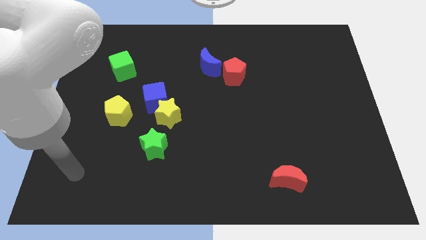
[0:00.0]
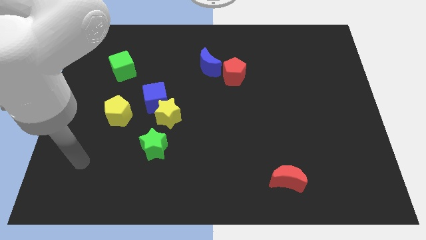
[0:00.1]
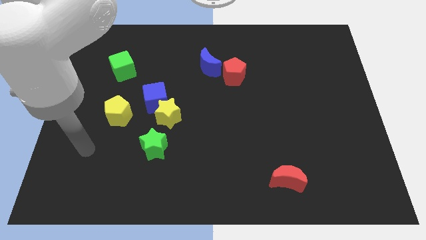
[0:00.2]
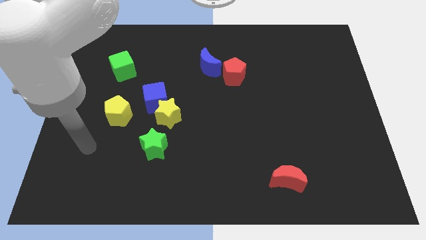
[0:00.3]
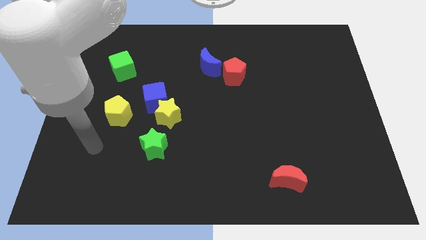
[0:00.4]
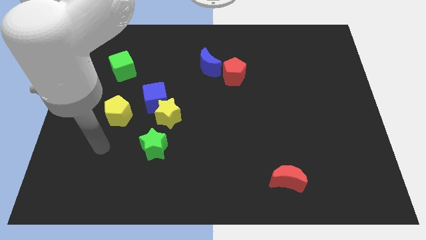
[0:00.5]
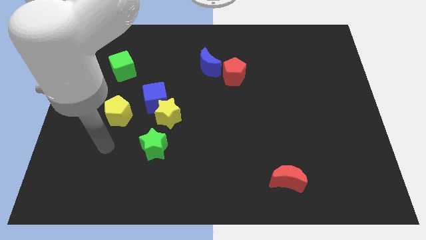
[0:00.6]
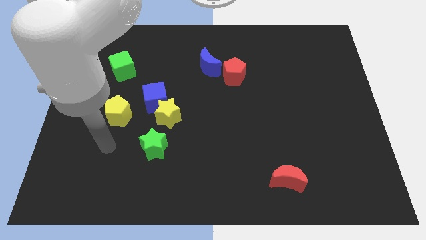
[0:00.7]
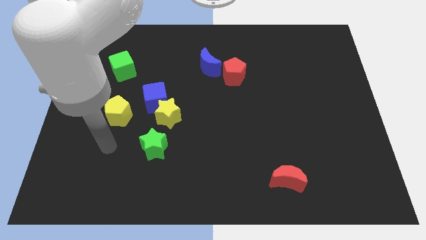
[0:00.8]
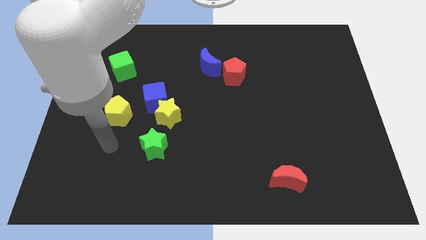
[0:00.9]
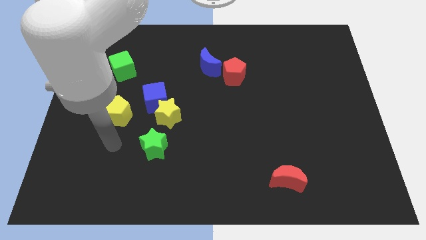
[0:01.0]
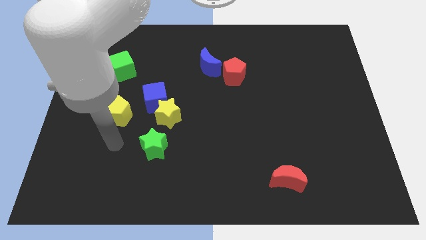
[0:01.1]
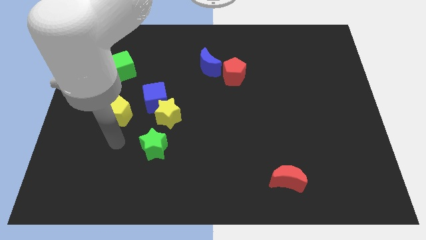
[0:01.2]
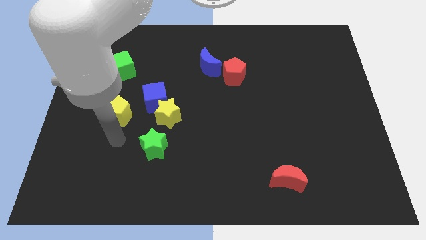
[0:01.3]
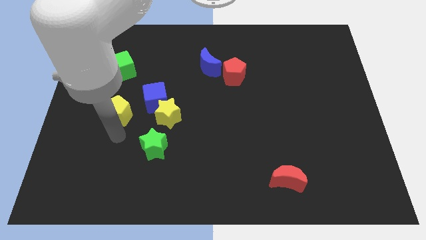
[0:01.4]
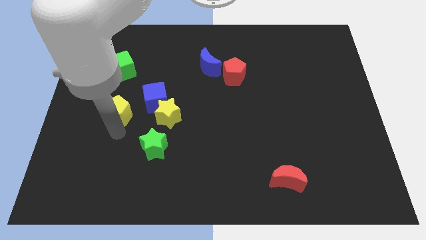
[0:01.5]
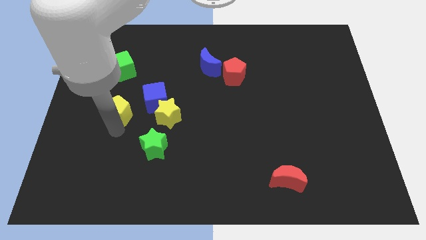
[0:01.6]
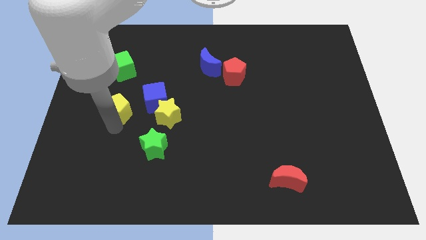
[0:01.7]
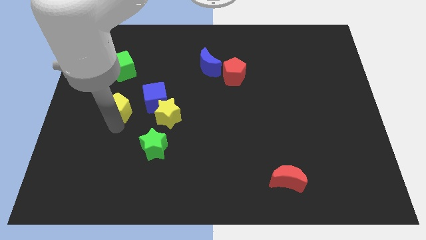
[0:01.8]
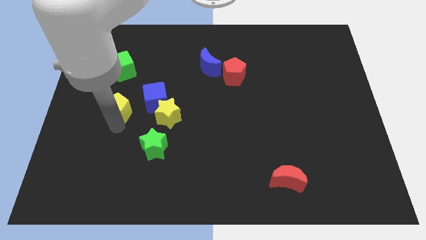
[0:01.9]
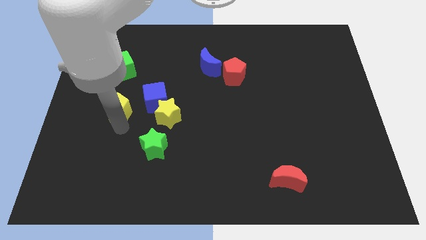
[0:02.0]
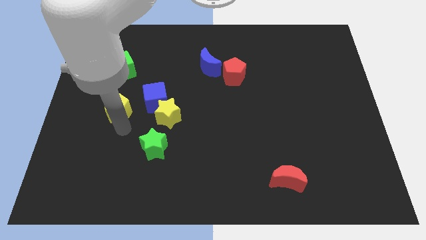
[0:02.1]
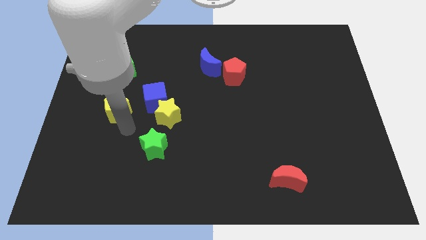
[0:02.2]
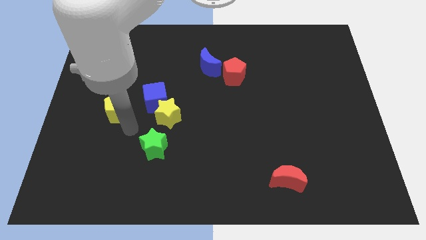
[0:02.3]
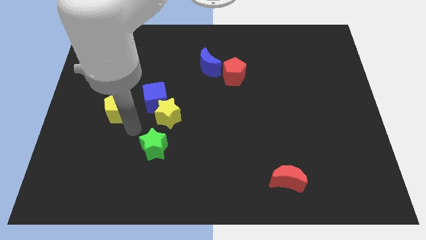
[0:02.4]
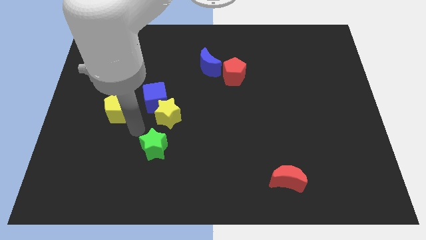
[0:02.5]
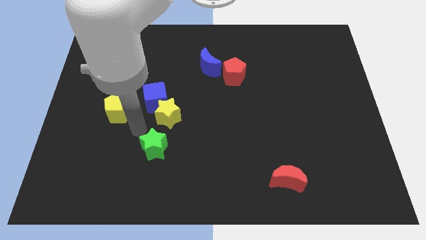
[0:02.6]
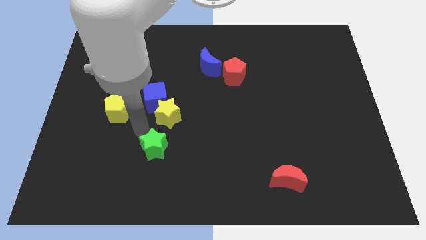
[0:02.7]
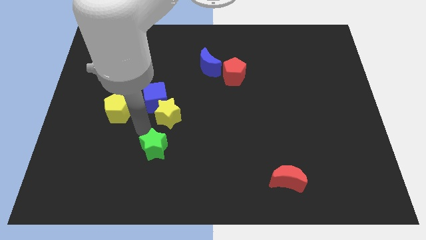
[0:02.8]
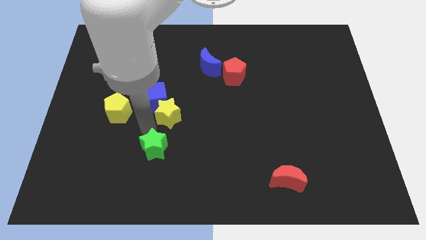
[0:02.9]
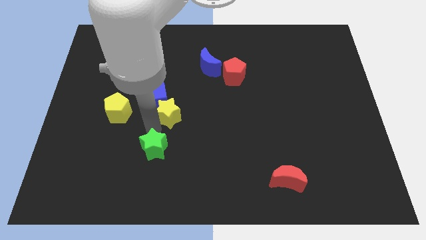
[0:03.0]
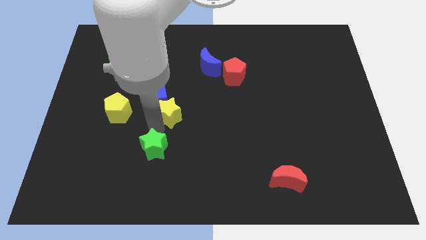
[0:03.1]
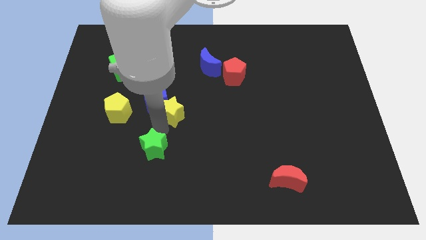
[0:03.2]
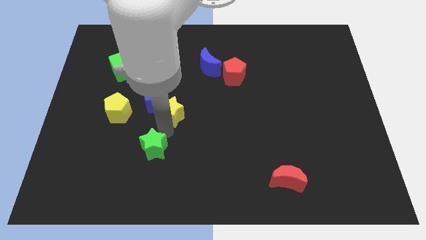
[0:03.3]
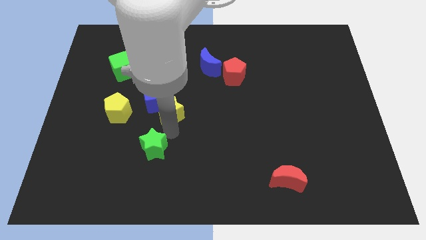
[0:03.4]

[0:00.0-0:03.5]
tap the yellow star

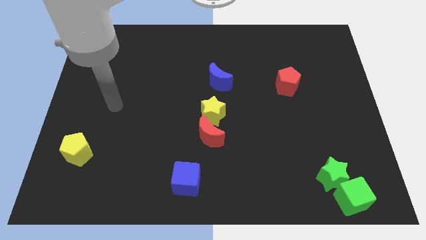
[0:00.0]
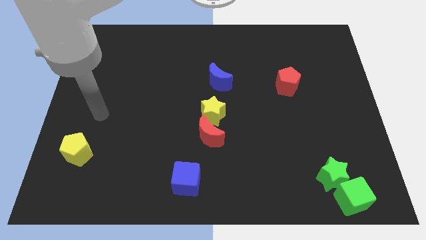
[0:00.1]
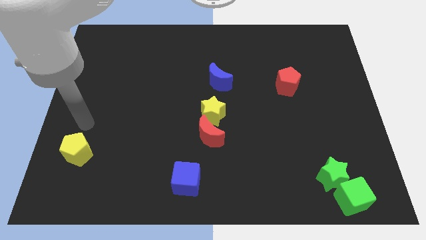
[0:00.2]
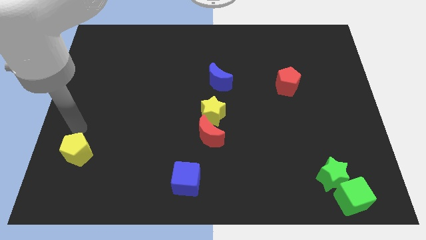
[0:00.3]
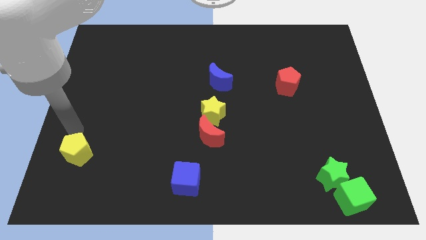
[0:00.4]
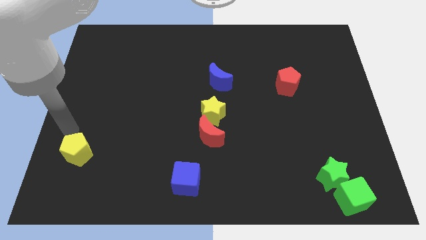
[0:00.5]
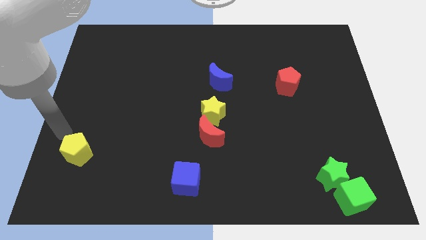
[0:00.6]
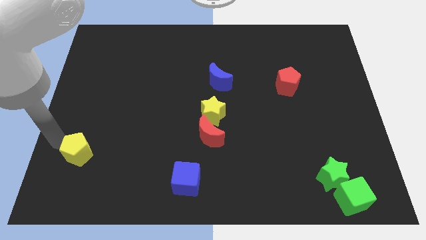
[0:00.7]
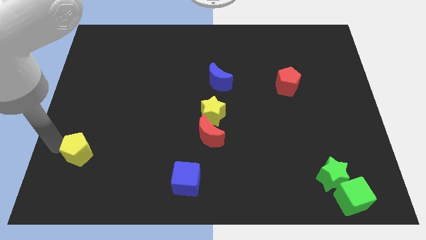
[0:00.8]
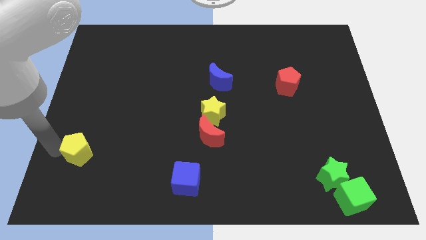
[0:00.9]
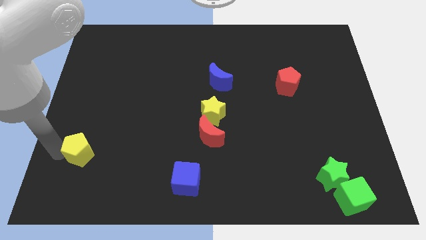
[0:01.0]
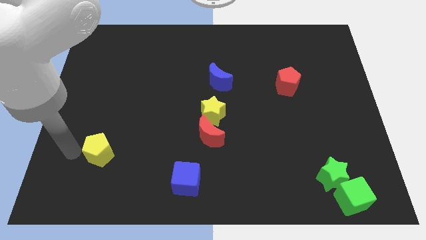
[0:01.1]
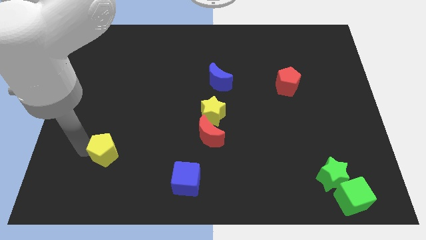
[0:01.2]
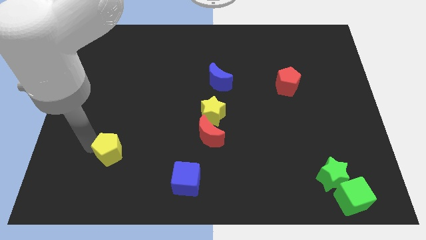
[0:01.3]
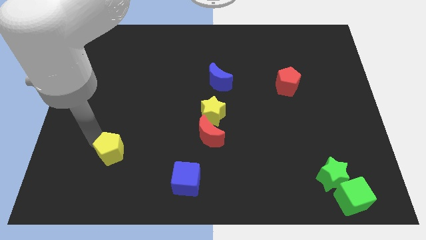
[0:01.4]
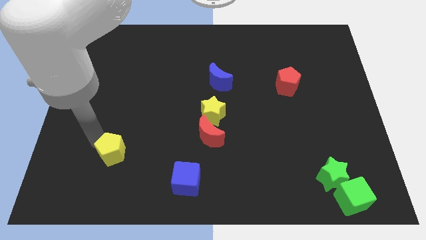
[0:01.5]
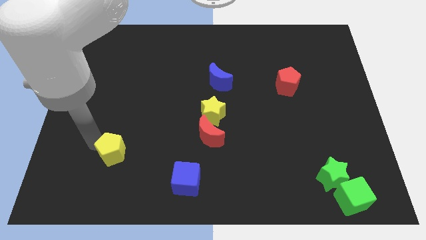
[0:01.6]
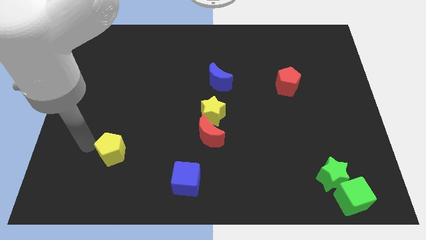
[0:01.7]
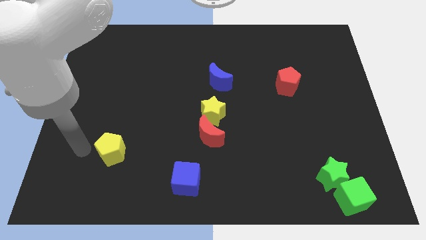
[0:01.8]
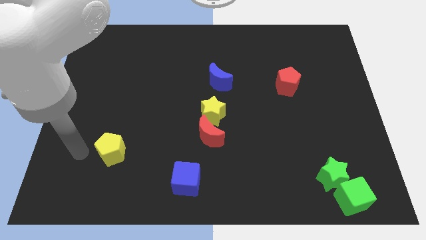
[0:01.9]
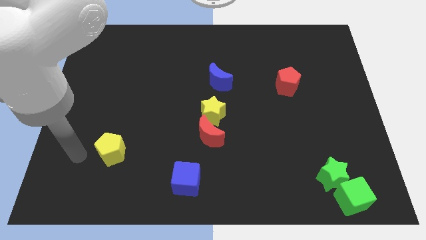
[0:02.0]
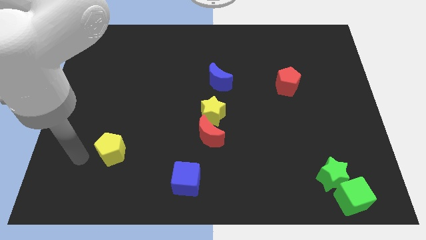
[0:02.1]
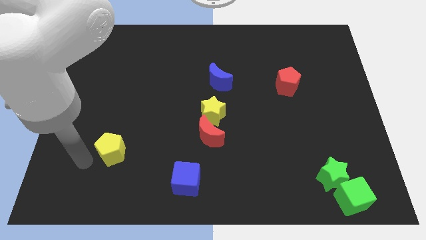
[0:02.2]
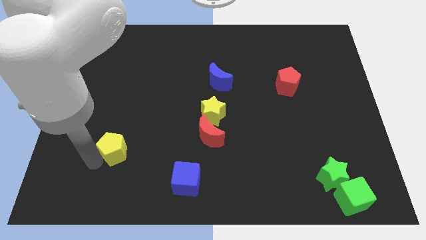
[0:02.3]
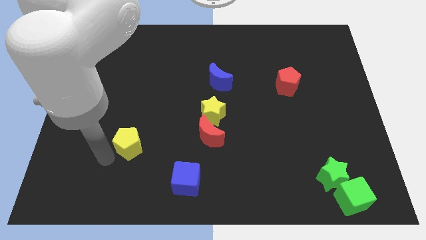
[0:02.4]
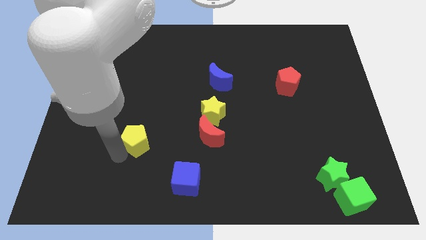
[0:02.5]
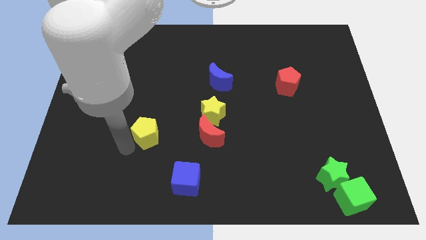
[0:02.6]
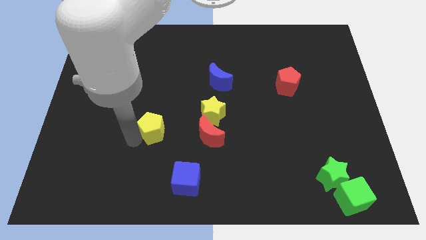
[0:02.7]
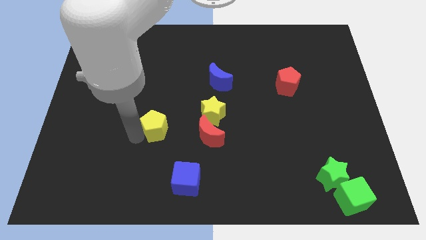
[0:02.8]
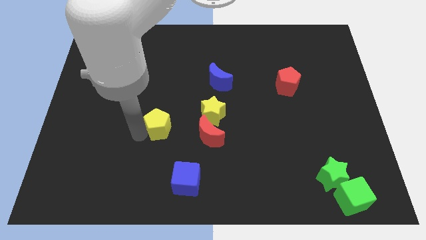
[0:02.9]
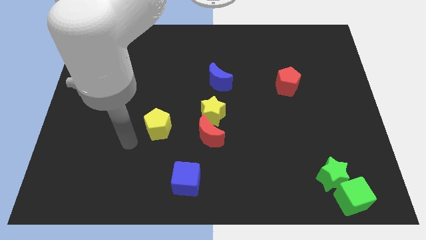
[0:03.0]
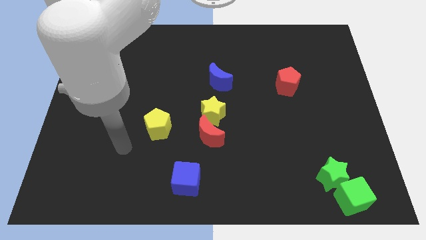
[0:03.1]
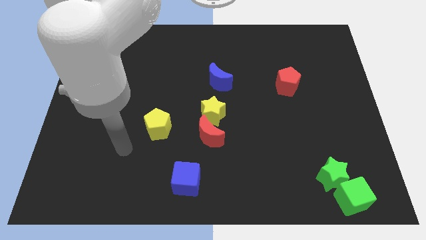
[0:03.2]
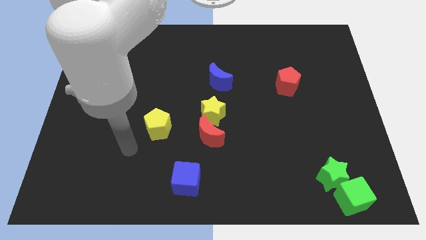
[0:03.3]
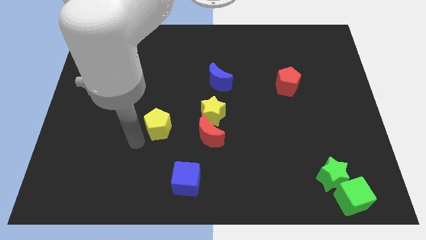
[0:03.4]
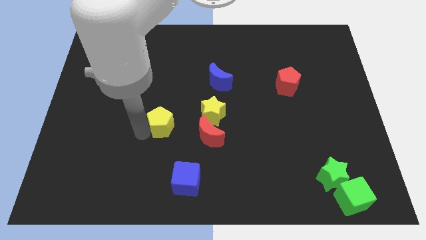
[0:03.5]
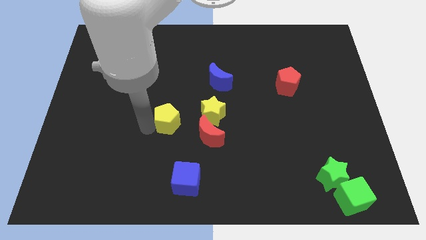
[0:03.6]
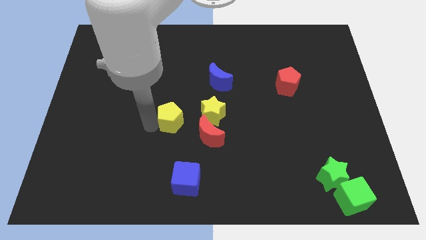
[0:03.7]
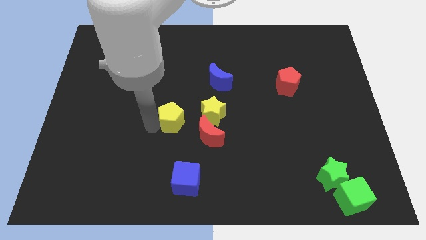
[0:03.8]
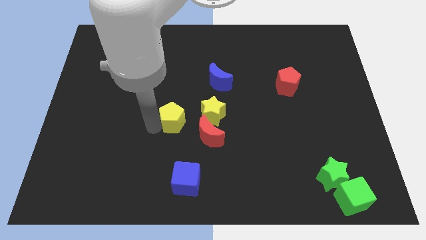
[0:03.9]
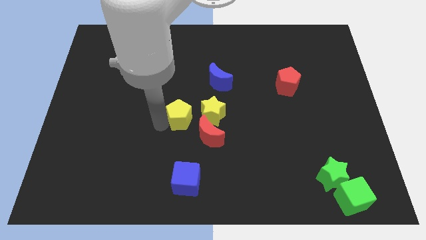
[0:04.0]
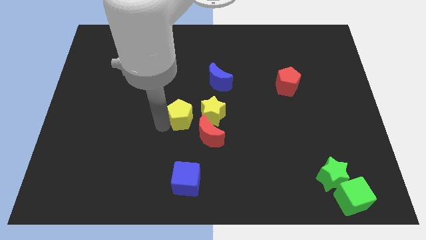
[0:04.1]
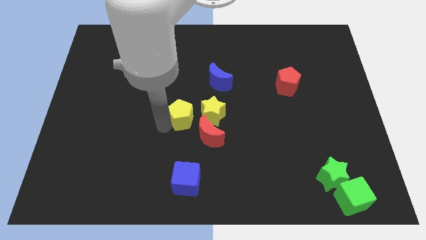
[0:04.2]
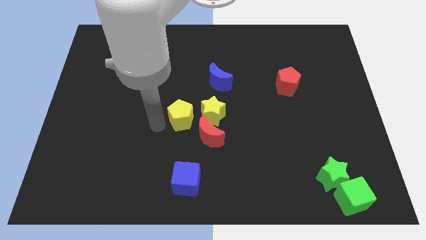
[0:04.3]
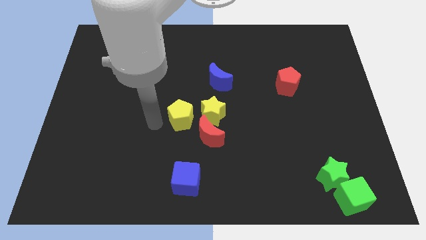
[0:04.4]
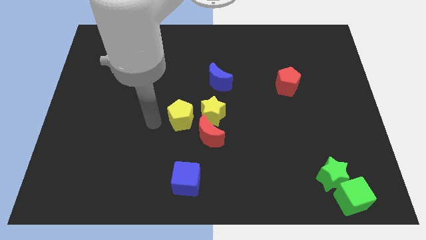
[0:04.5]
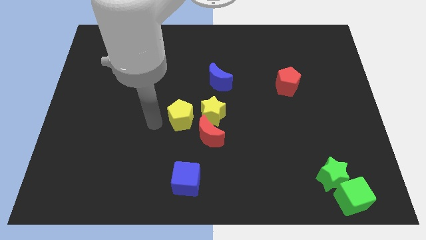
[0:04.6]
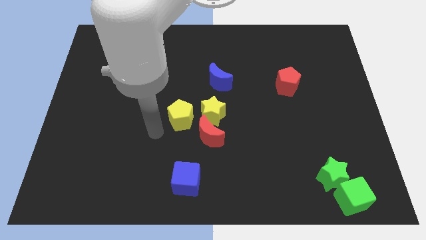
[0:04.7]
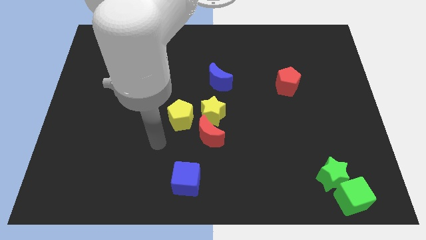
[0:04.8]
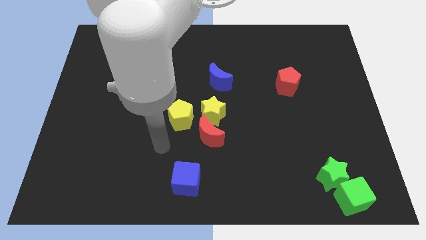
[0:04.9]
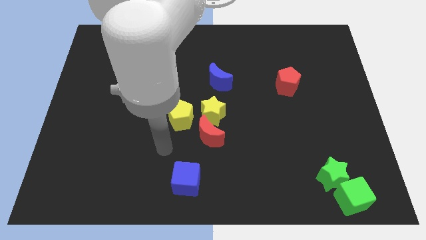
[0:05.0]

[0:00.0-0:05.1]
place the yellow pentagon to left side of the yellow star

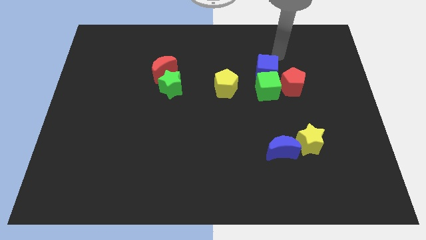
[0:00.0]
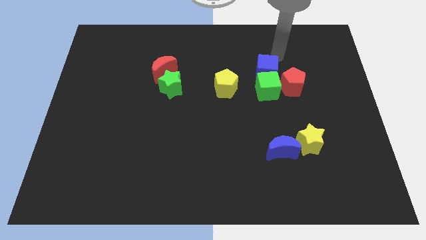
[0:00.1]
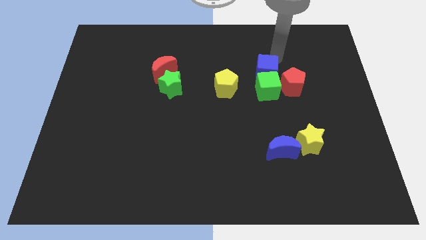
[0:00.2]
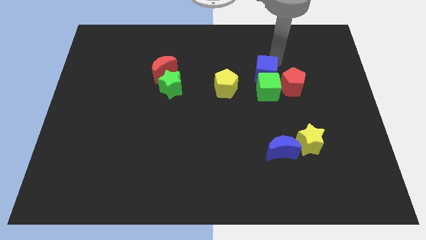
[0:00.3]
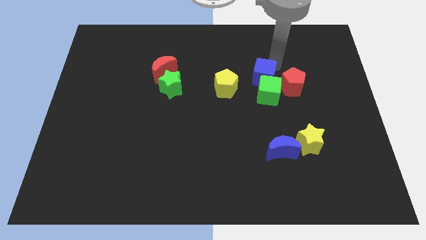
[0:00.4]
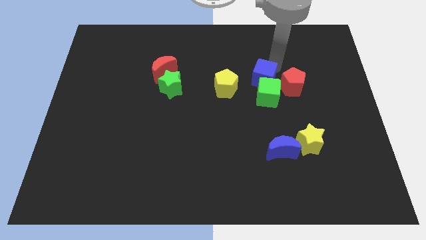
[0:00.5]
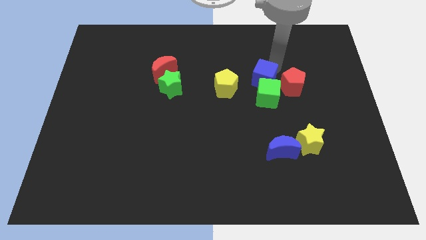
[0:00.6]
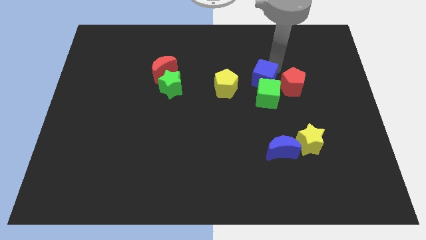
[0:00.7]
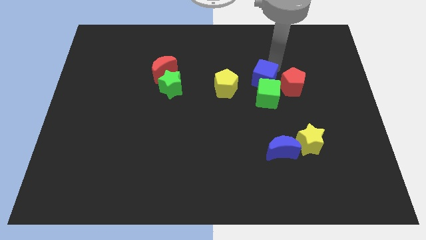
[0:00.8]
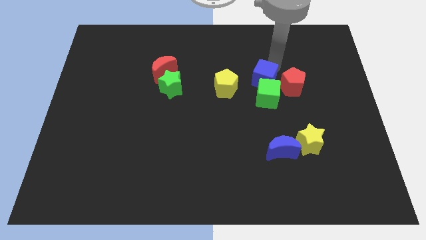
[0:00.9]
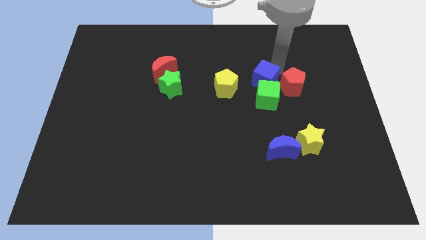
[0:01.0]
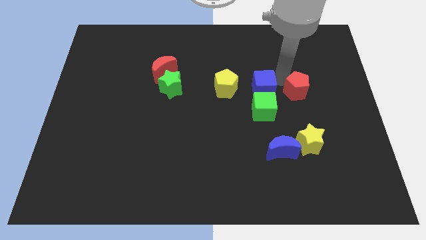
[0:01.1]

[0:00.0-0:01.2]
push green cube into the blue cube
